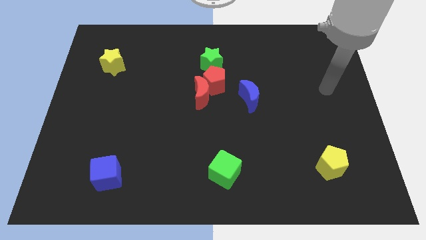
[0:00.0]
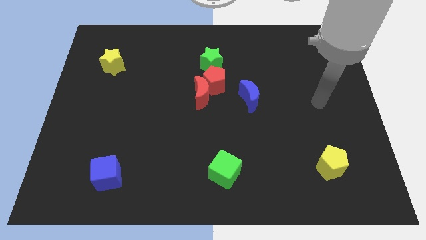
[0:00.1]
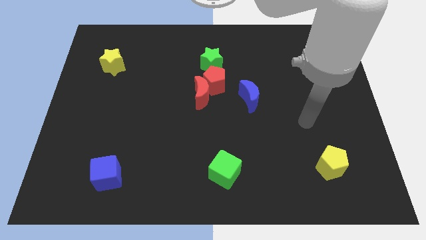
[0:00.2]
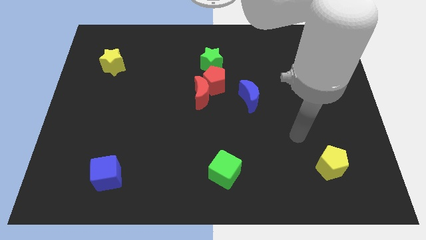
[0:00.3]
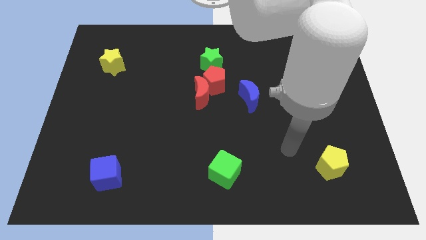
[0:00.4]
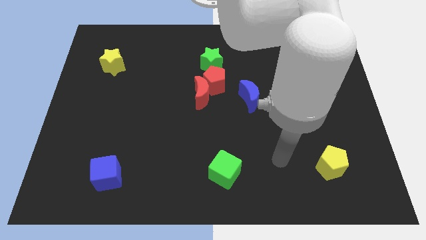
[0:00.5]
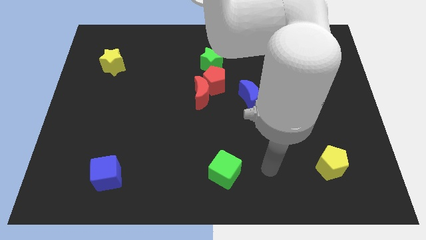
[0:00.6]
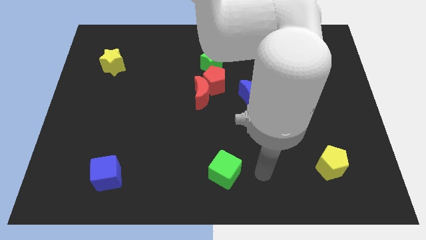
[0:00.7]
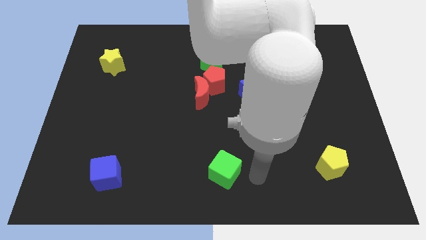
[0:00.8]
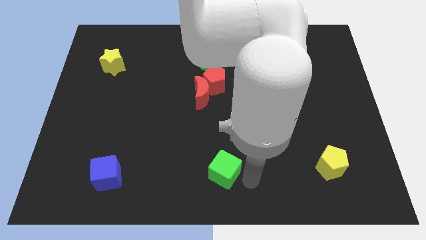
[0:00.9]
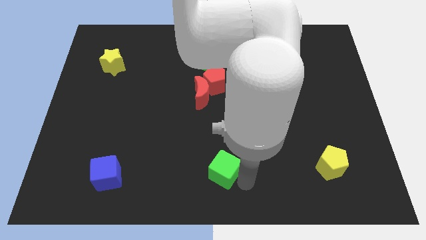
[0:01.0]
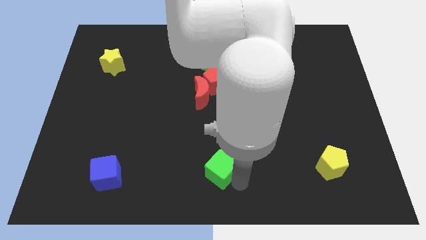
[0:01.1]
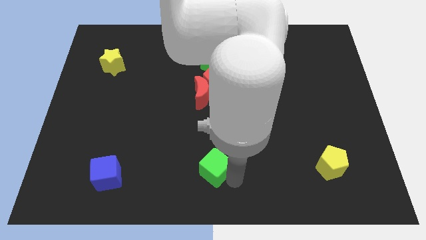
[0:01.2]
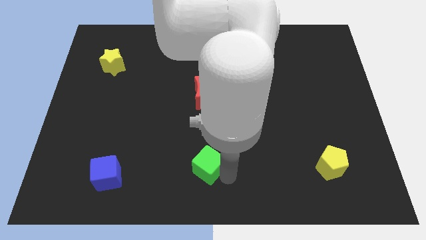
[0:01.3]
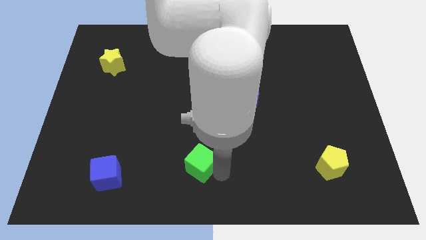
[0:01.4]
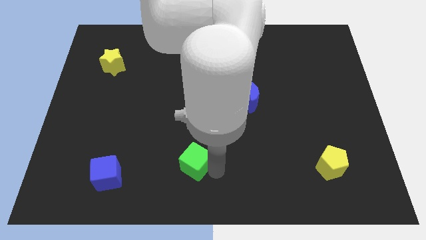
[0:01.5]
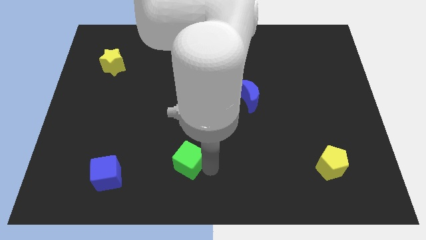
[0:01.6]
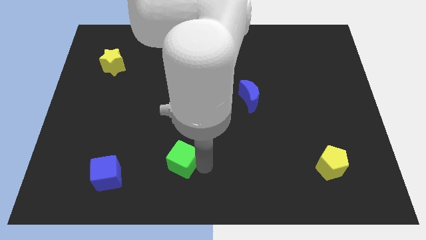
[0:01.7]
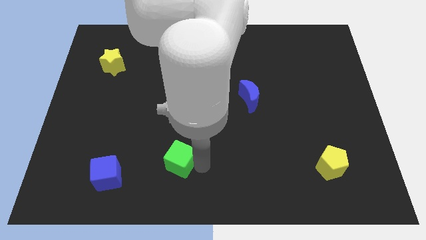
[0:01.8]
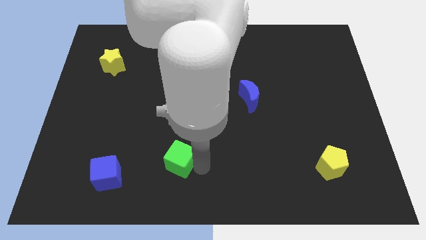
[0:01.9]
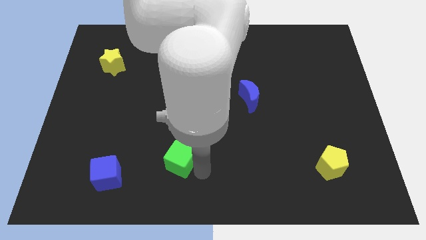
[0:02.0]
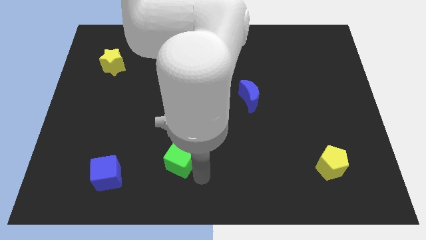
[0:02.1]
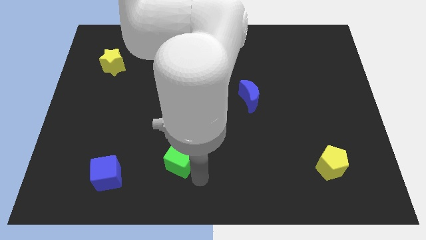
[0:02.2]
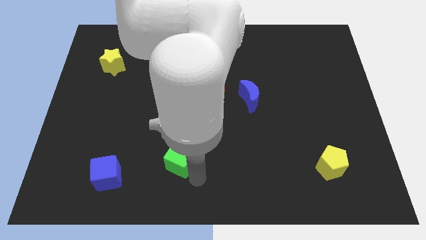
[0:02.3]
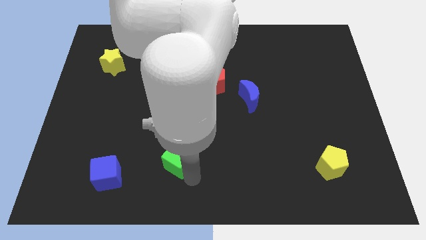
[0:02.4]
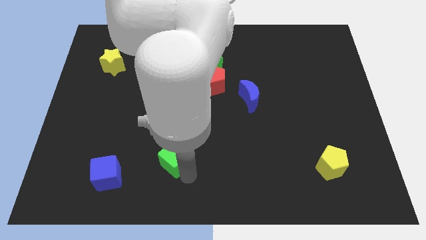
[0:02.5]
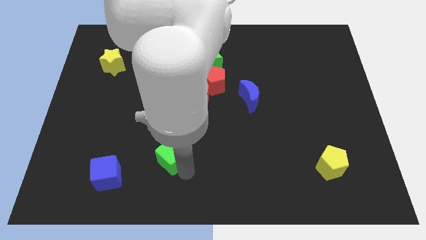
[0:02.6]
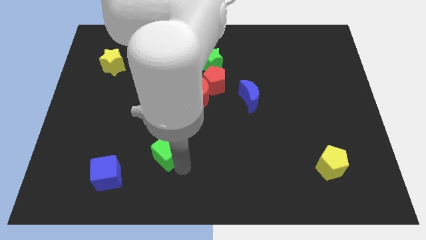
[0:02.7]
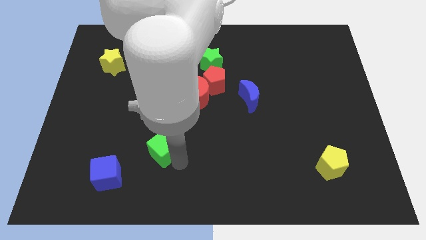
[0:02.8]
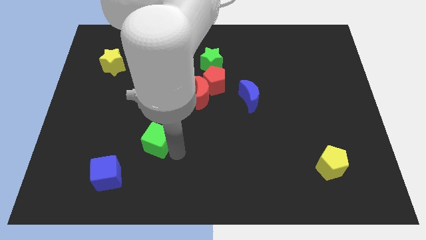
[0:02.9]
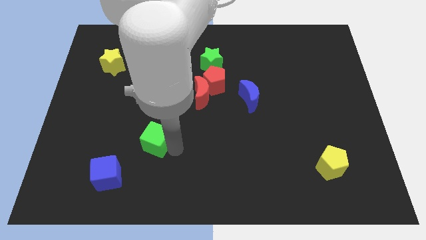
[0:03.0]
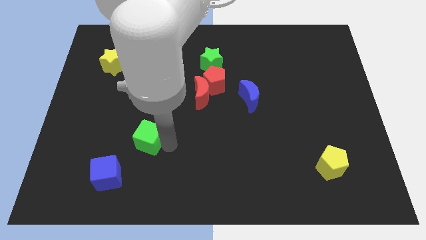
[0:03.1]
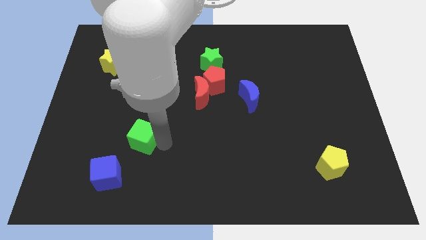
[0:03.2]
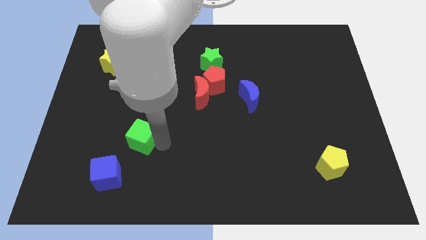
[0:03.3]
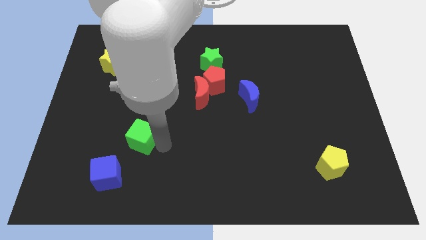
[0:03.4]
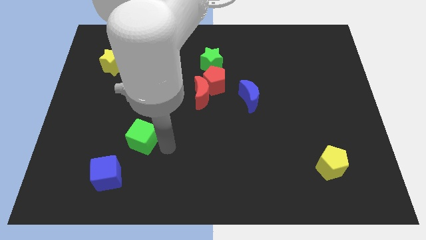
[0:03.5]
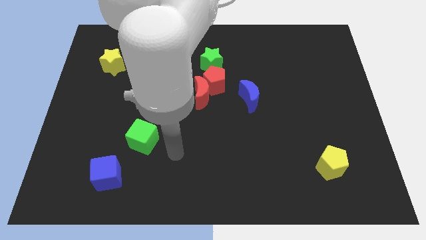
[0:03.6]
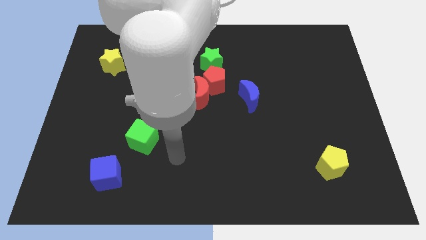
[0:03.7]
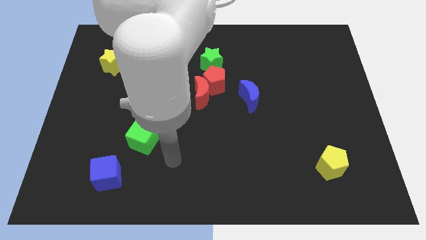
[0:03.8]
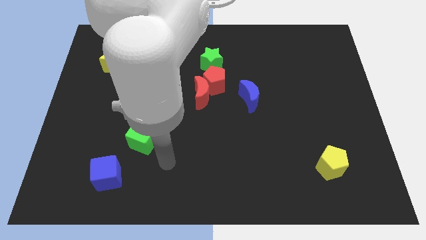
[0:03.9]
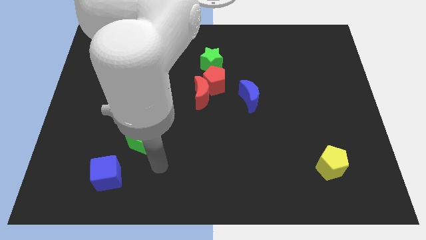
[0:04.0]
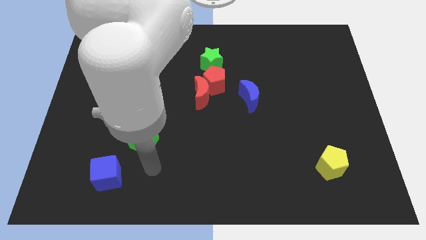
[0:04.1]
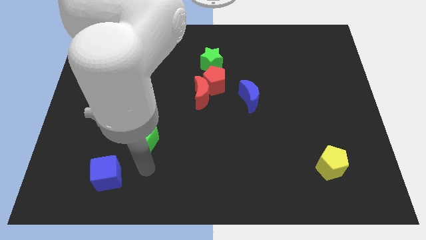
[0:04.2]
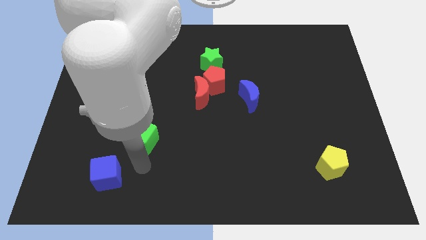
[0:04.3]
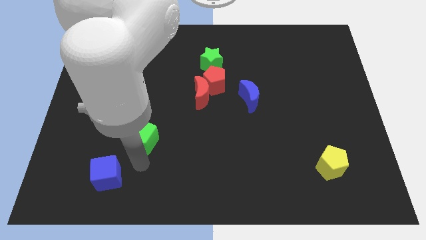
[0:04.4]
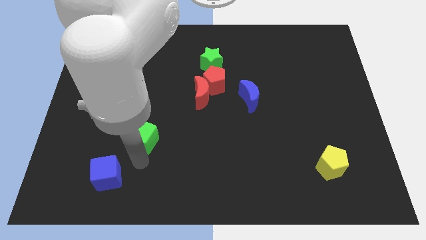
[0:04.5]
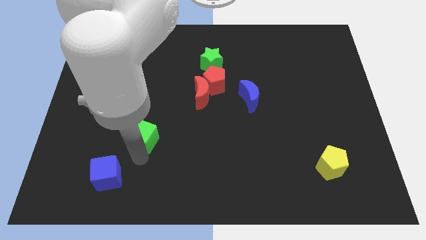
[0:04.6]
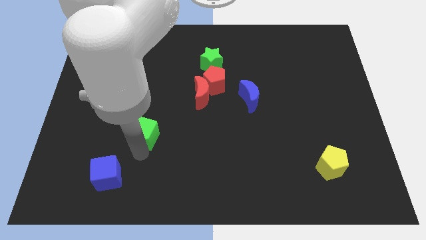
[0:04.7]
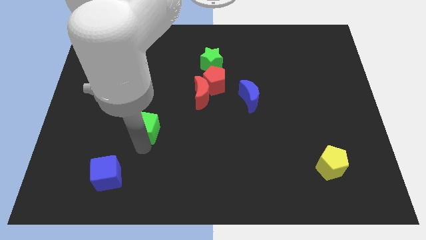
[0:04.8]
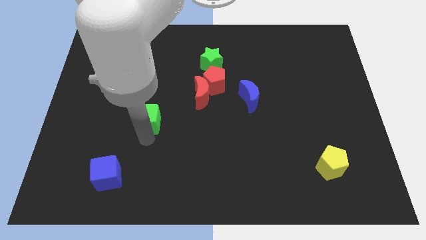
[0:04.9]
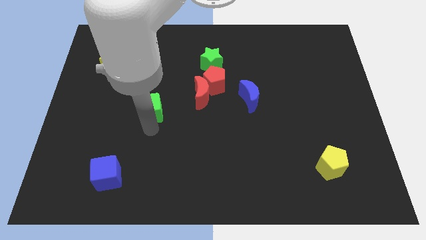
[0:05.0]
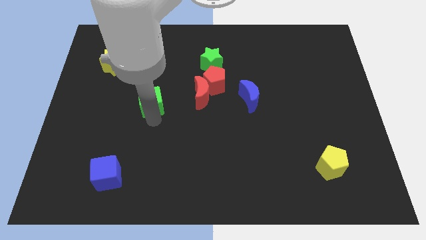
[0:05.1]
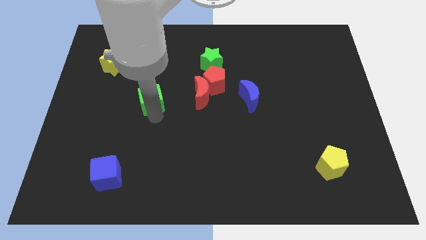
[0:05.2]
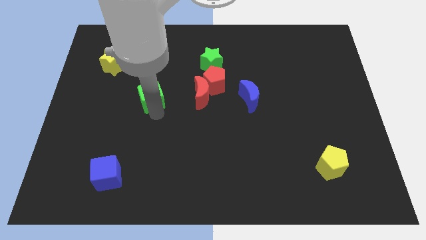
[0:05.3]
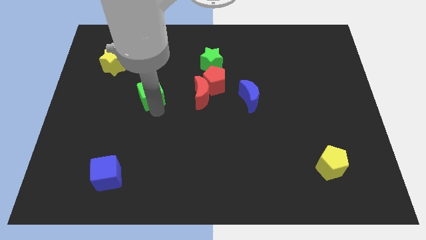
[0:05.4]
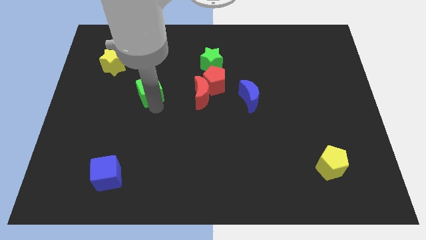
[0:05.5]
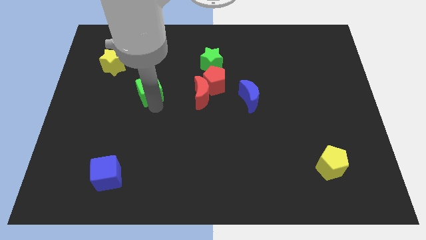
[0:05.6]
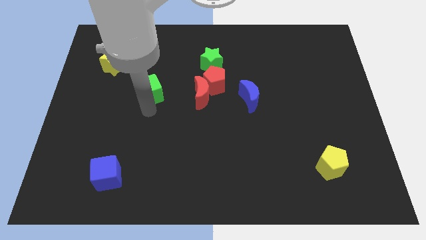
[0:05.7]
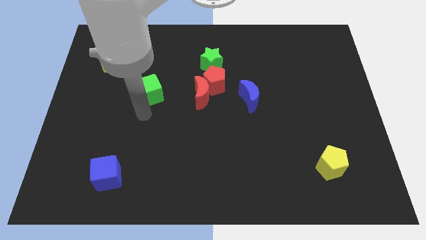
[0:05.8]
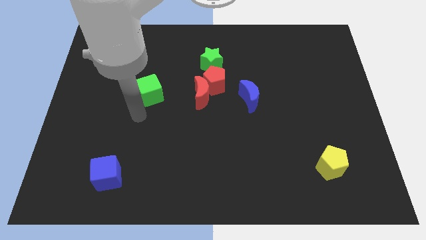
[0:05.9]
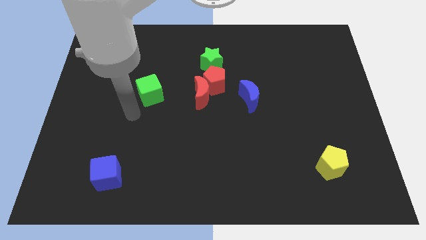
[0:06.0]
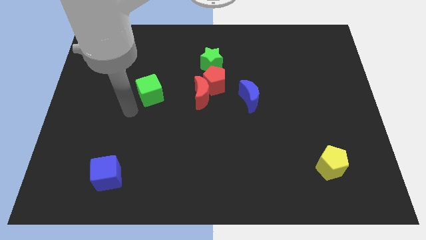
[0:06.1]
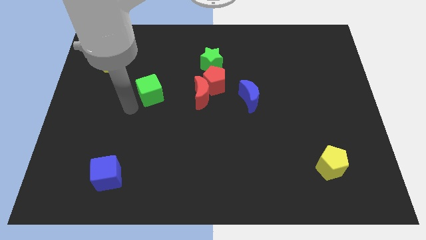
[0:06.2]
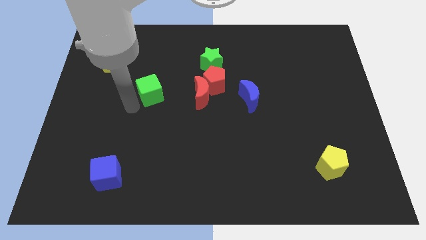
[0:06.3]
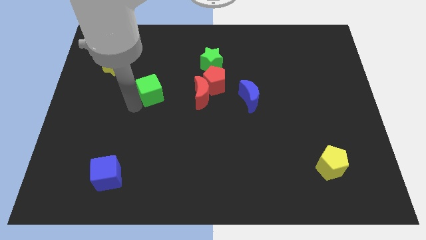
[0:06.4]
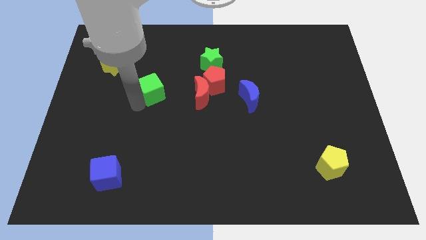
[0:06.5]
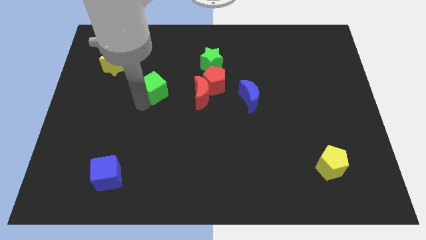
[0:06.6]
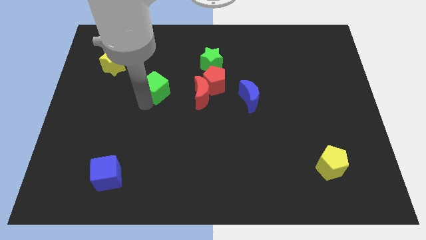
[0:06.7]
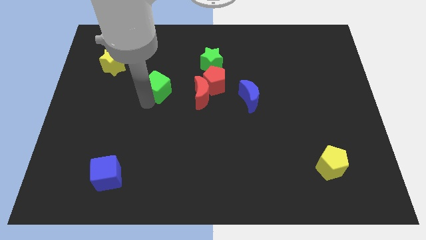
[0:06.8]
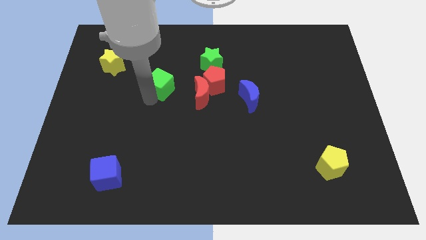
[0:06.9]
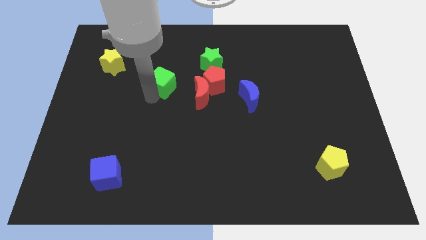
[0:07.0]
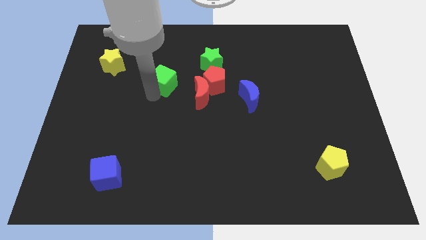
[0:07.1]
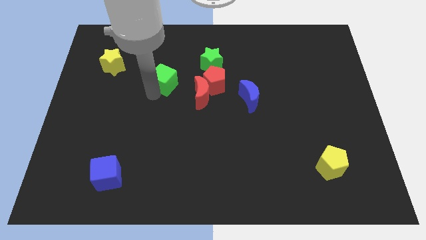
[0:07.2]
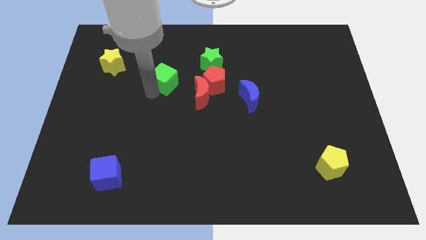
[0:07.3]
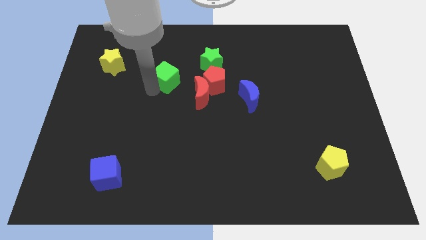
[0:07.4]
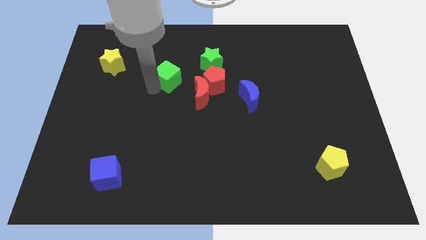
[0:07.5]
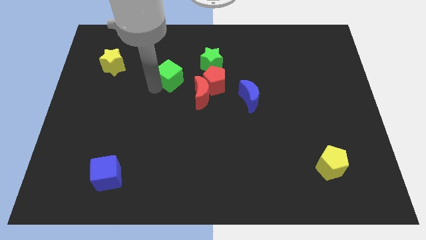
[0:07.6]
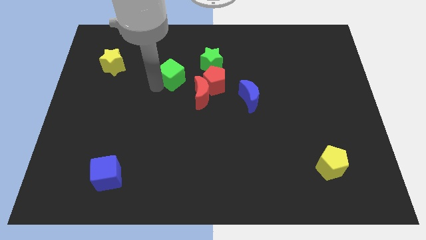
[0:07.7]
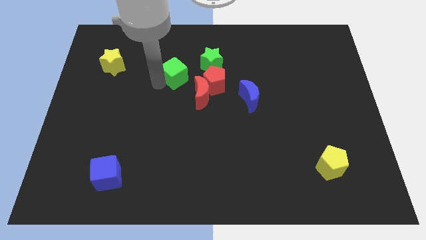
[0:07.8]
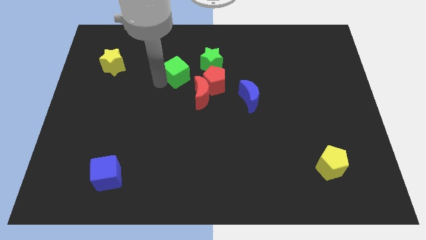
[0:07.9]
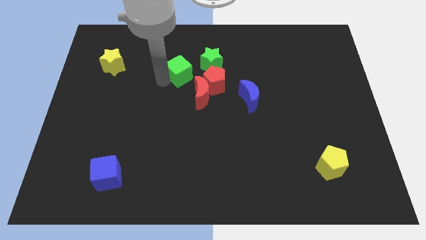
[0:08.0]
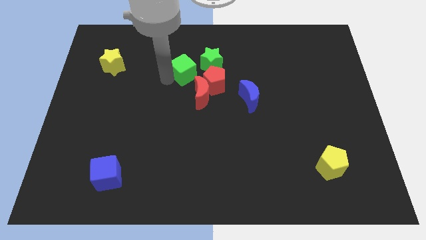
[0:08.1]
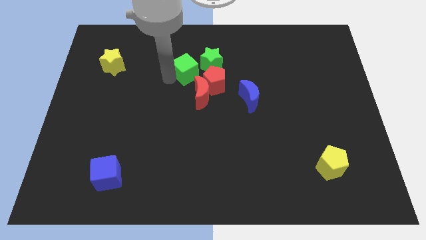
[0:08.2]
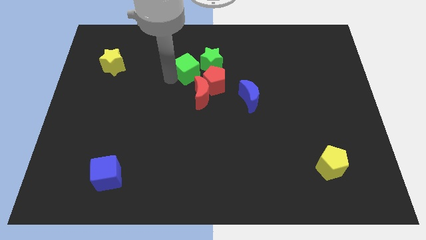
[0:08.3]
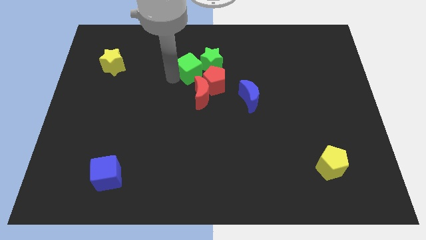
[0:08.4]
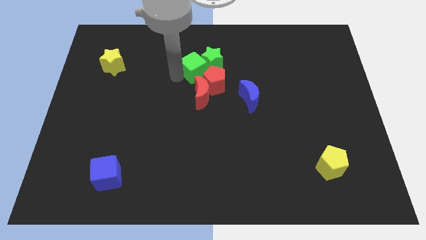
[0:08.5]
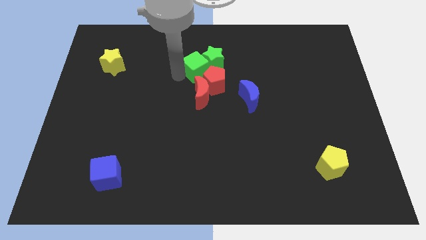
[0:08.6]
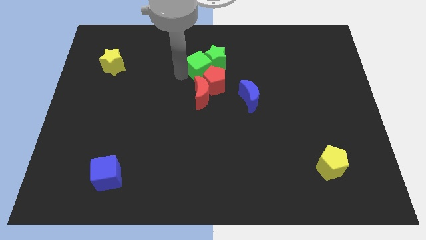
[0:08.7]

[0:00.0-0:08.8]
put the green cube next to the green star
